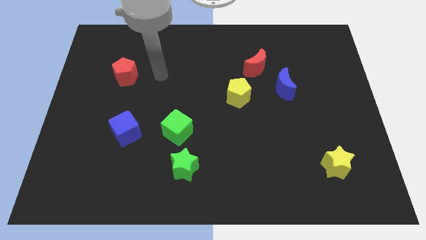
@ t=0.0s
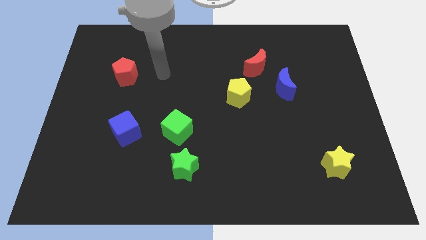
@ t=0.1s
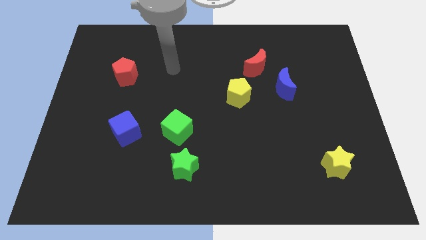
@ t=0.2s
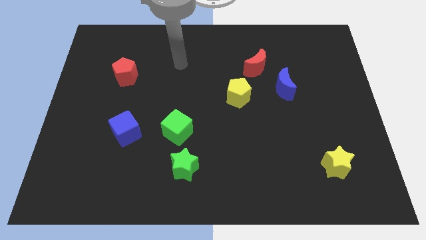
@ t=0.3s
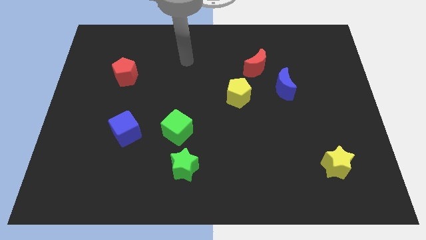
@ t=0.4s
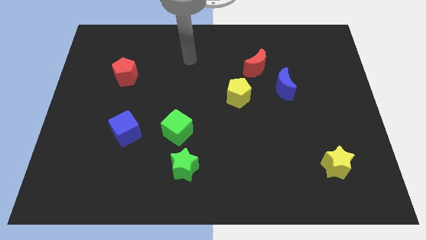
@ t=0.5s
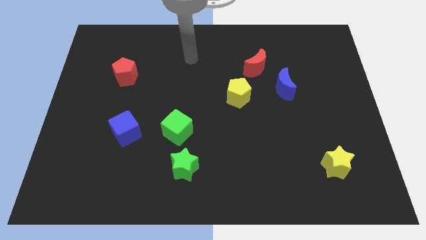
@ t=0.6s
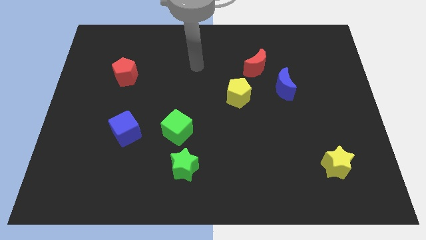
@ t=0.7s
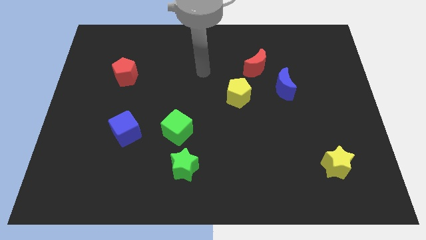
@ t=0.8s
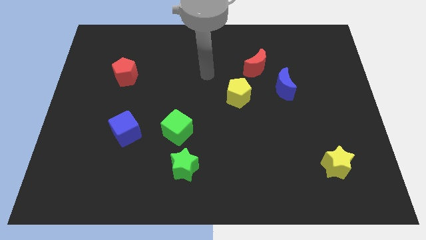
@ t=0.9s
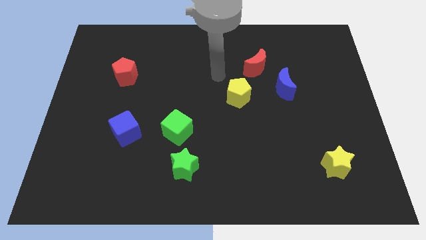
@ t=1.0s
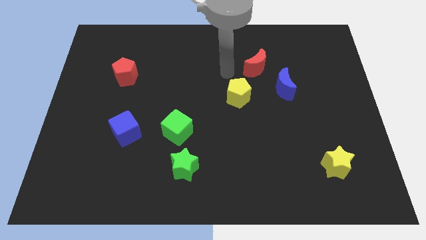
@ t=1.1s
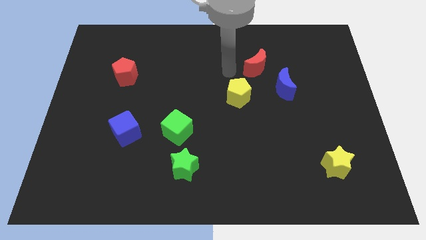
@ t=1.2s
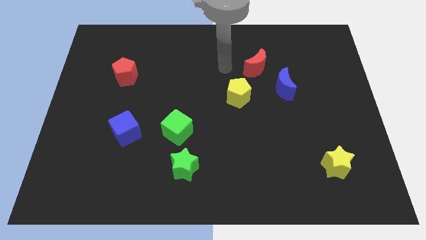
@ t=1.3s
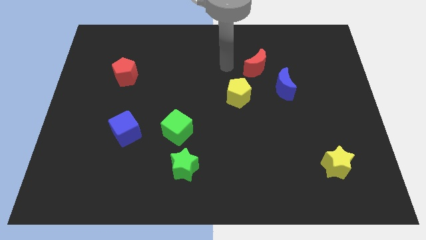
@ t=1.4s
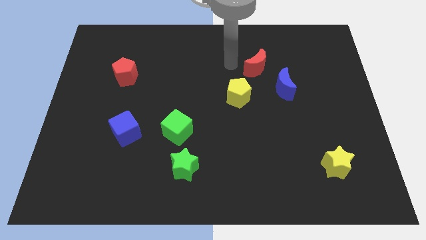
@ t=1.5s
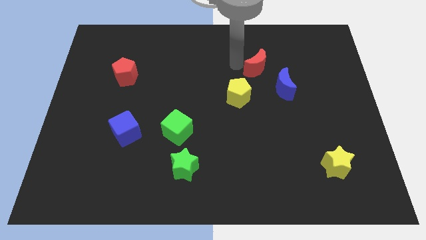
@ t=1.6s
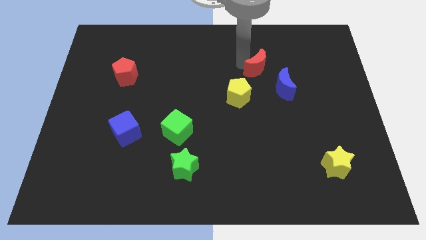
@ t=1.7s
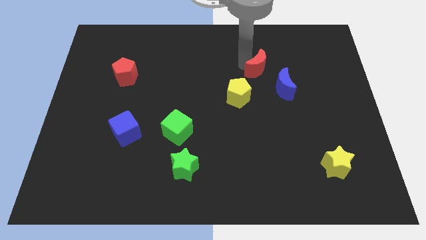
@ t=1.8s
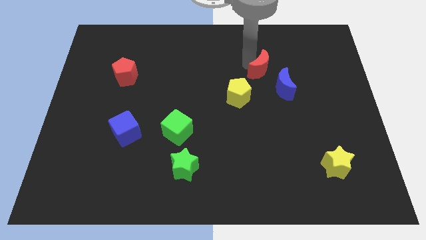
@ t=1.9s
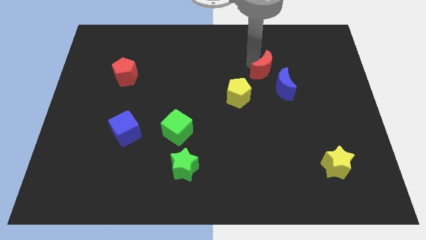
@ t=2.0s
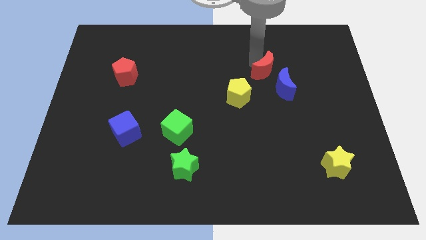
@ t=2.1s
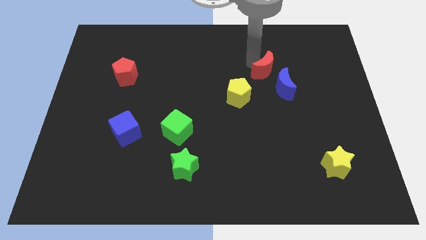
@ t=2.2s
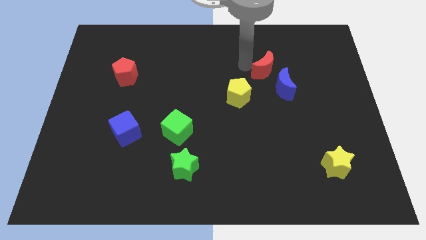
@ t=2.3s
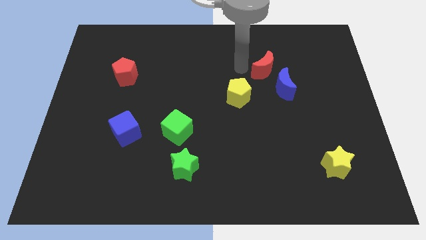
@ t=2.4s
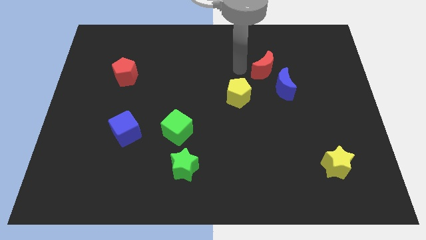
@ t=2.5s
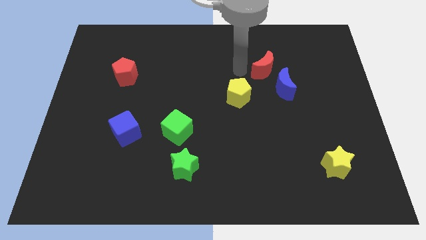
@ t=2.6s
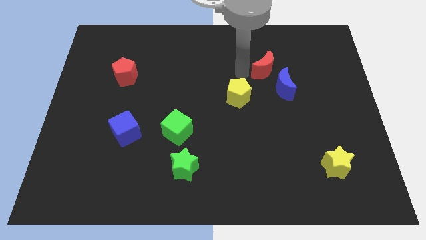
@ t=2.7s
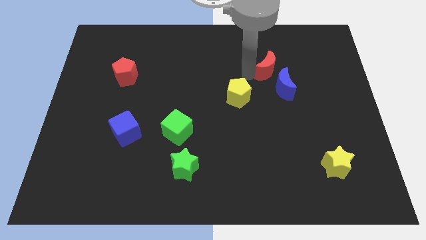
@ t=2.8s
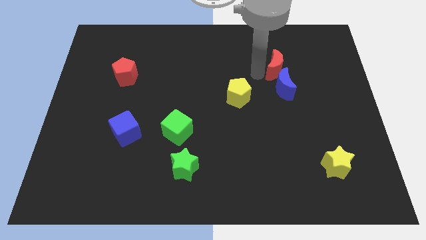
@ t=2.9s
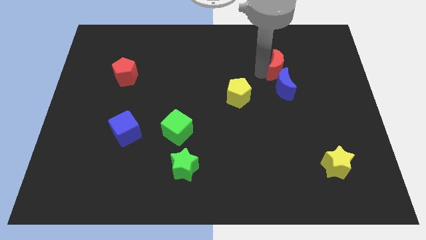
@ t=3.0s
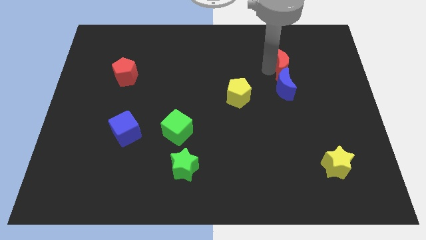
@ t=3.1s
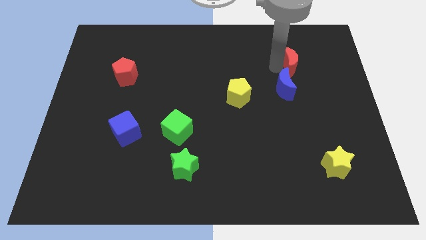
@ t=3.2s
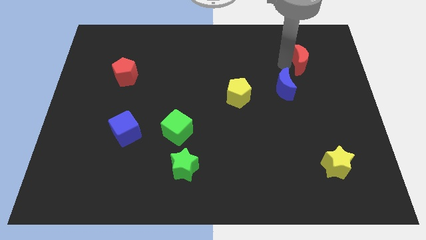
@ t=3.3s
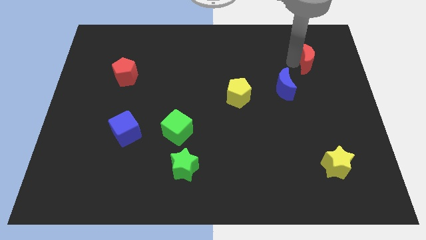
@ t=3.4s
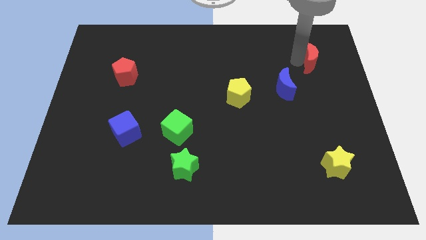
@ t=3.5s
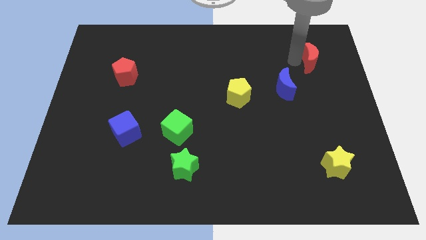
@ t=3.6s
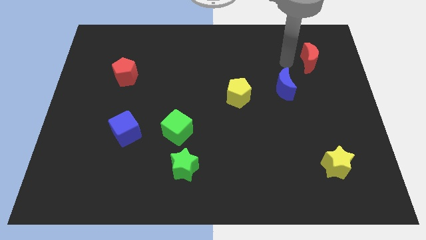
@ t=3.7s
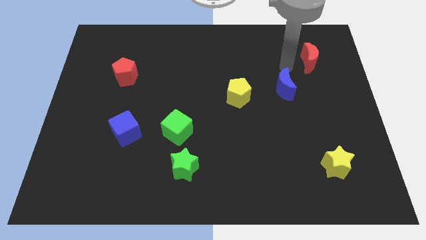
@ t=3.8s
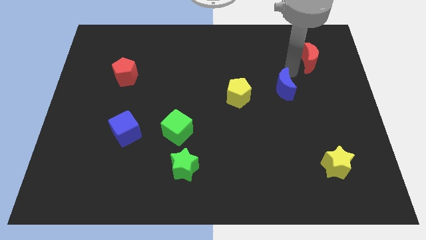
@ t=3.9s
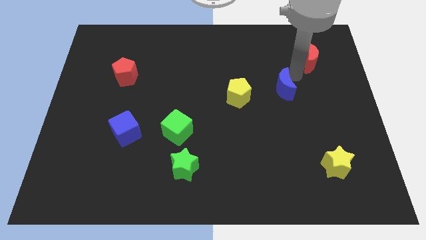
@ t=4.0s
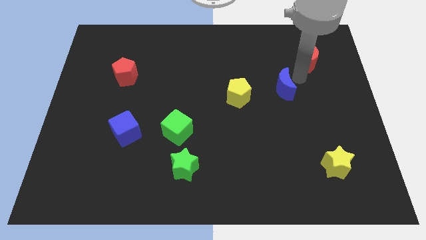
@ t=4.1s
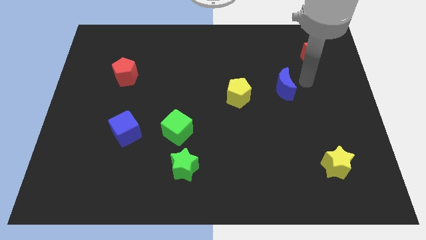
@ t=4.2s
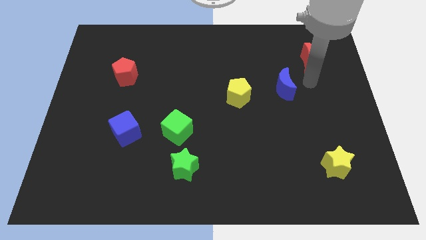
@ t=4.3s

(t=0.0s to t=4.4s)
separate the red crescent from the blue crescent

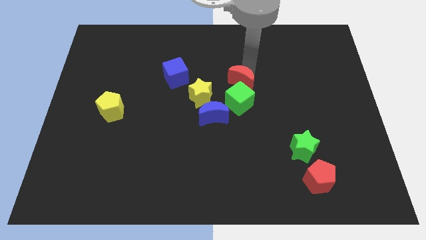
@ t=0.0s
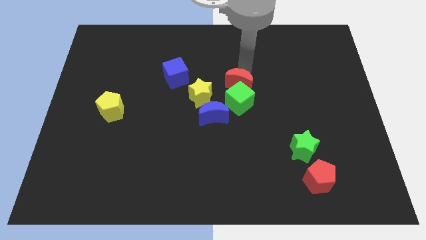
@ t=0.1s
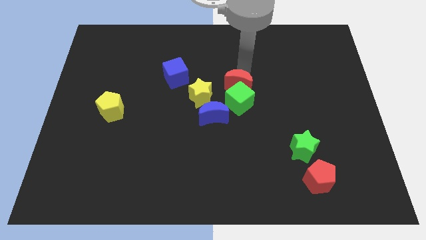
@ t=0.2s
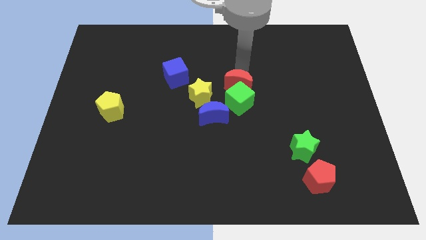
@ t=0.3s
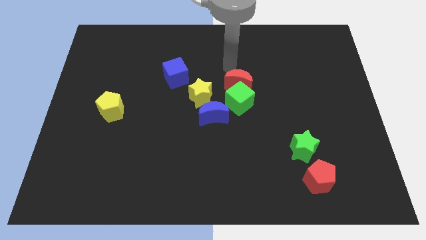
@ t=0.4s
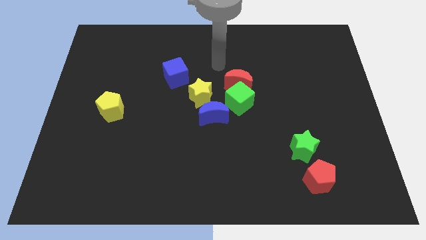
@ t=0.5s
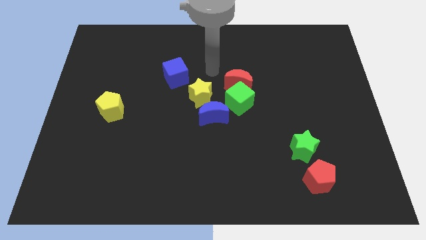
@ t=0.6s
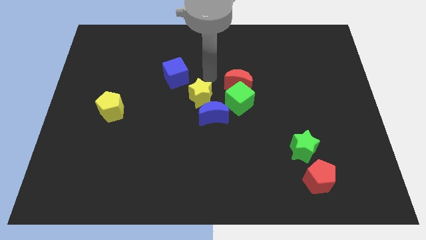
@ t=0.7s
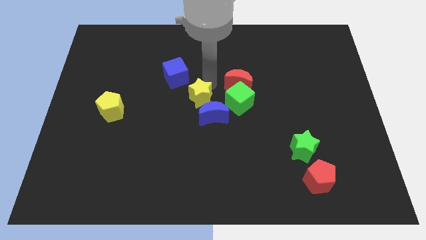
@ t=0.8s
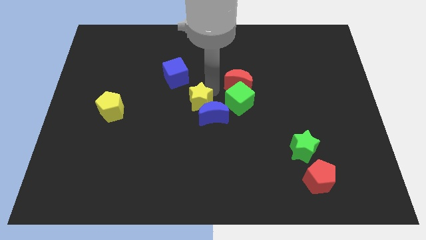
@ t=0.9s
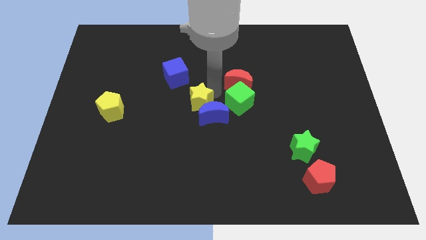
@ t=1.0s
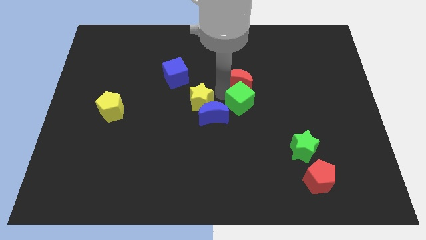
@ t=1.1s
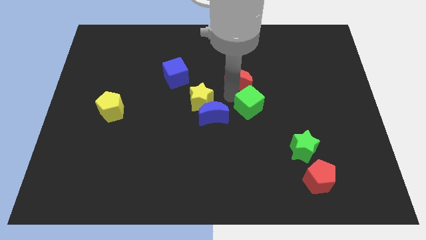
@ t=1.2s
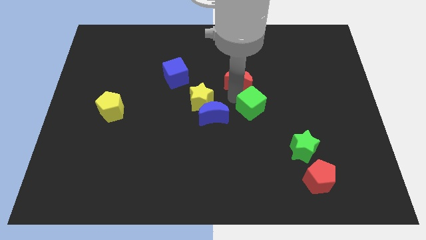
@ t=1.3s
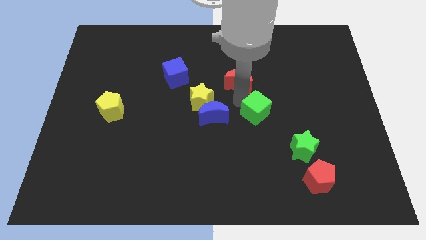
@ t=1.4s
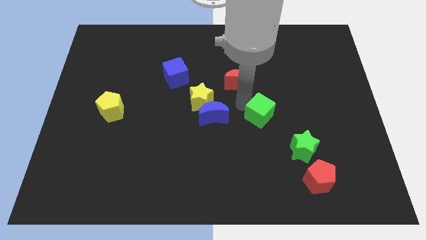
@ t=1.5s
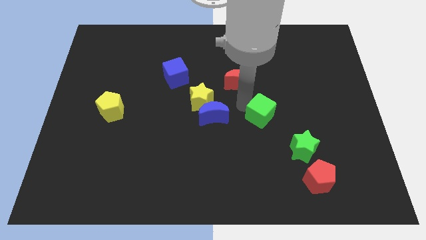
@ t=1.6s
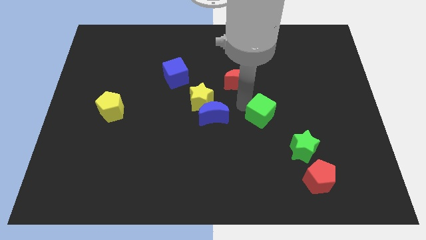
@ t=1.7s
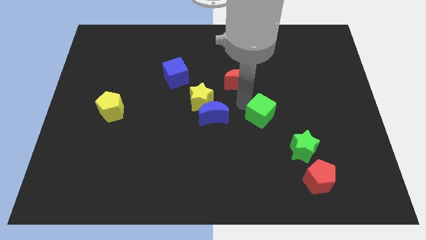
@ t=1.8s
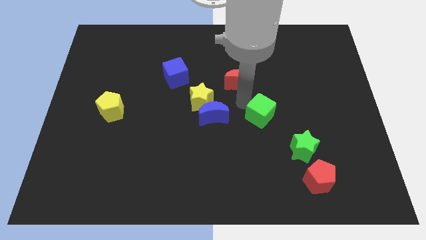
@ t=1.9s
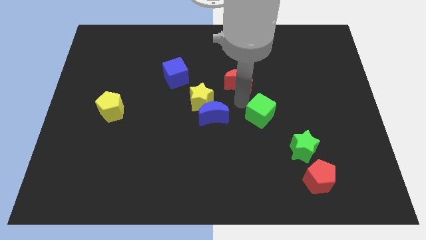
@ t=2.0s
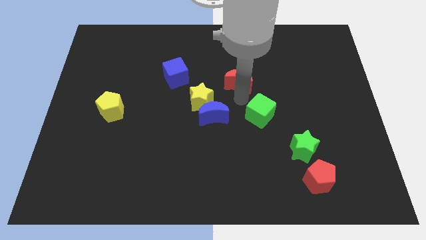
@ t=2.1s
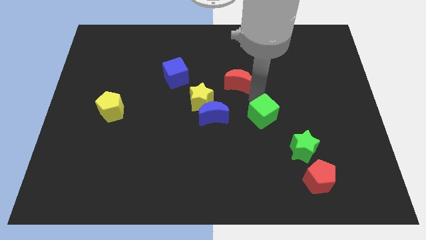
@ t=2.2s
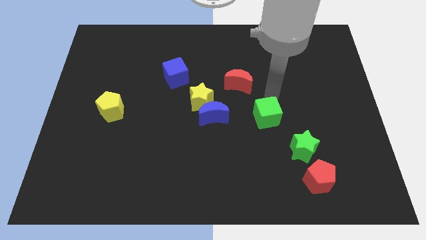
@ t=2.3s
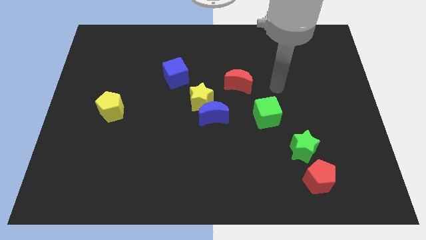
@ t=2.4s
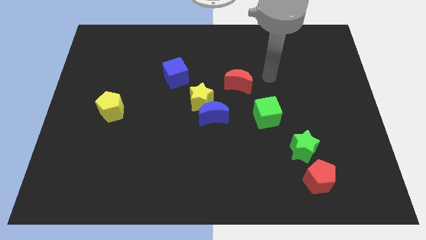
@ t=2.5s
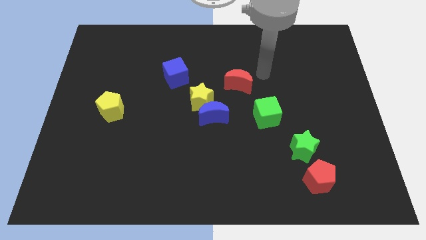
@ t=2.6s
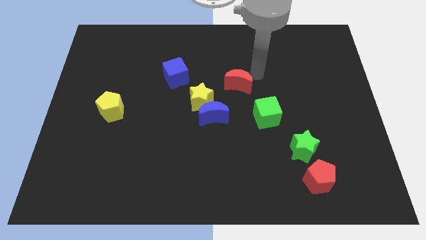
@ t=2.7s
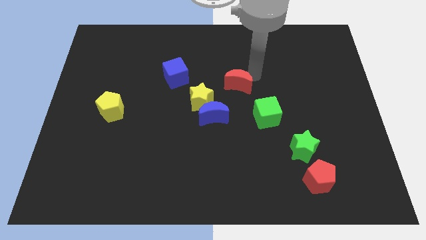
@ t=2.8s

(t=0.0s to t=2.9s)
place the green cube in between the red moon and green star

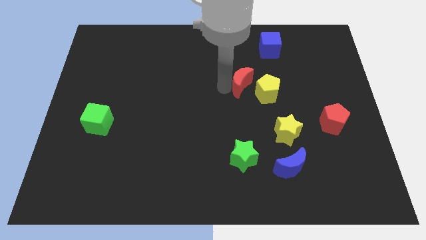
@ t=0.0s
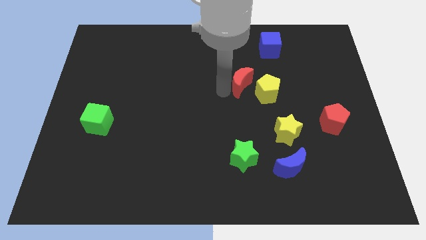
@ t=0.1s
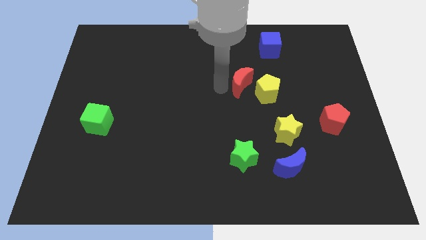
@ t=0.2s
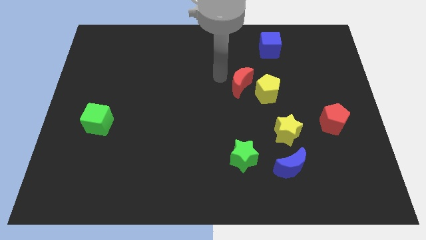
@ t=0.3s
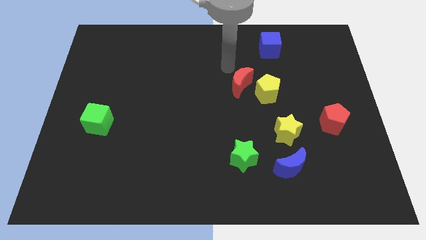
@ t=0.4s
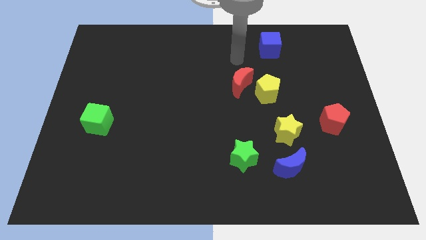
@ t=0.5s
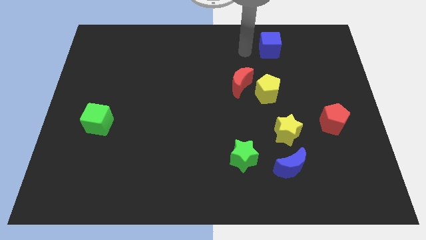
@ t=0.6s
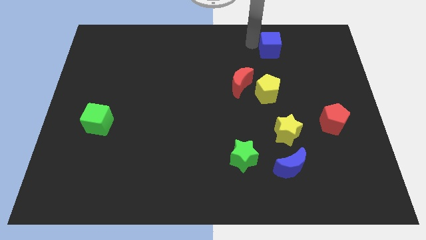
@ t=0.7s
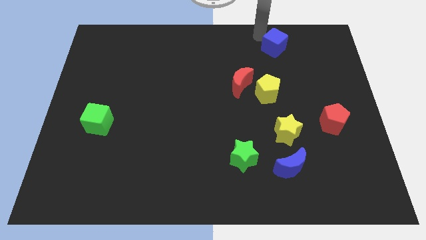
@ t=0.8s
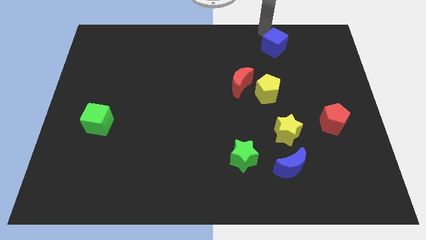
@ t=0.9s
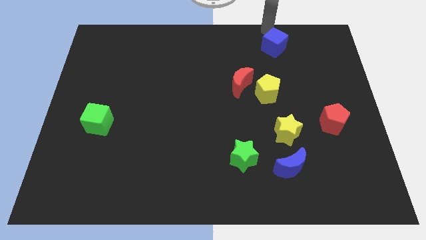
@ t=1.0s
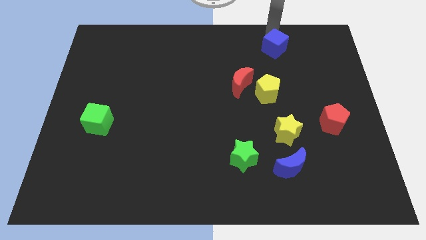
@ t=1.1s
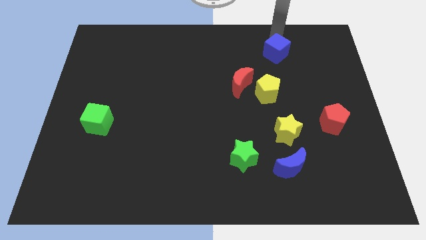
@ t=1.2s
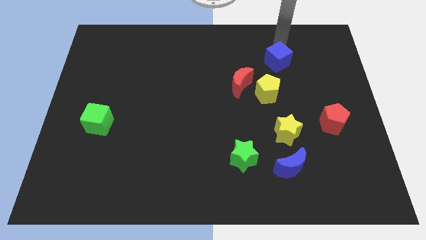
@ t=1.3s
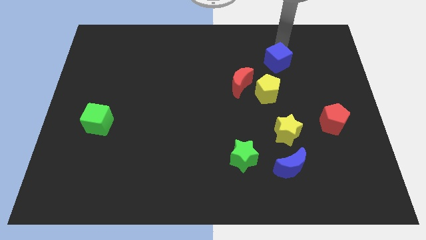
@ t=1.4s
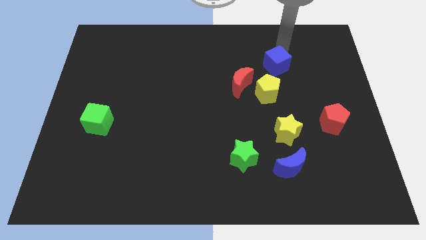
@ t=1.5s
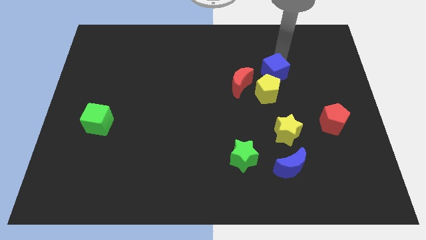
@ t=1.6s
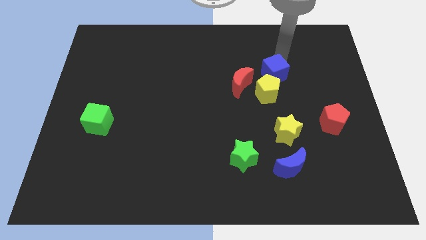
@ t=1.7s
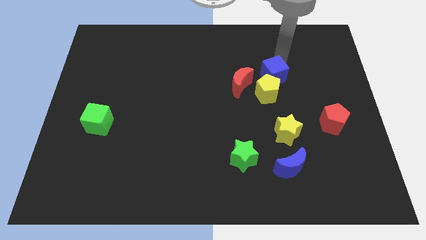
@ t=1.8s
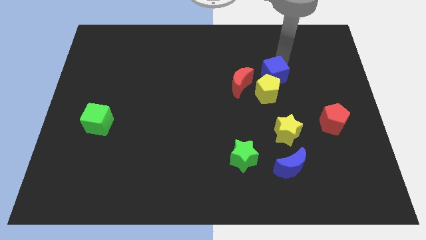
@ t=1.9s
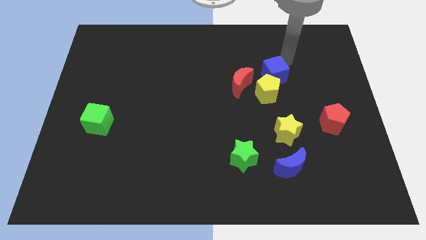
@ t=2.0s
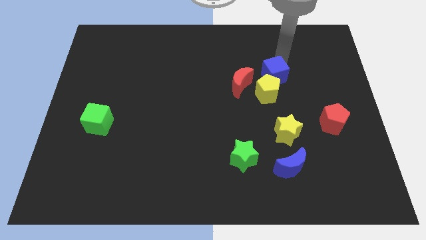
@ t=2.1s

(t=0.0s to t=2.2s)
place the blue cube at the top of yellow pentagon
